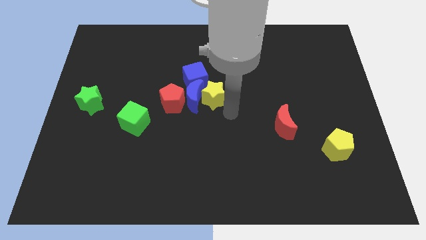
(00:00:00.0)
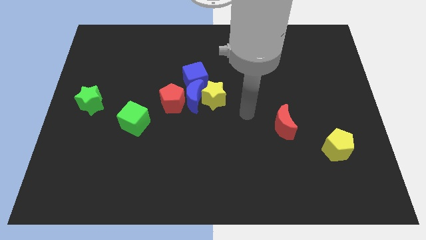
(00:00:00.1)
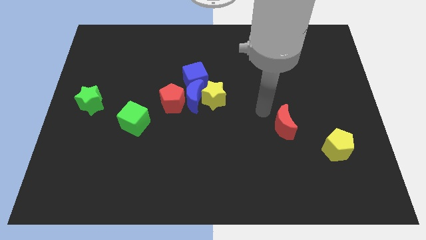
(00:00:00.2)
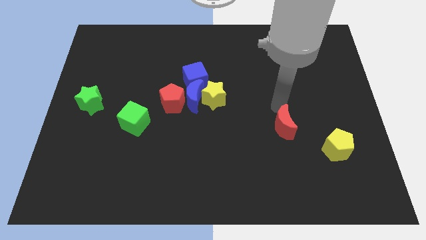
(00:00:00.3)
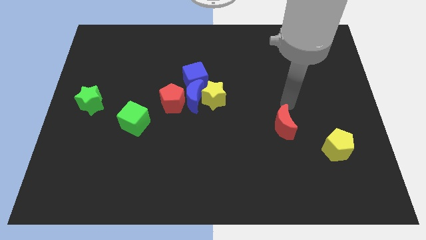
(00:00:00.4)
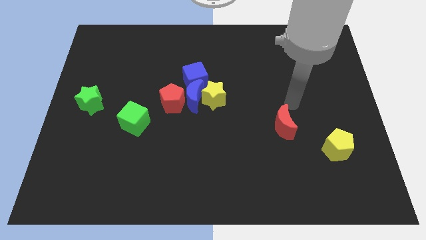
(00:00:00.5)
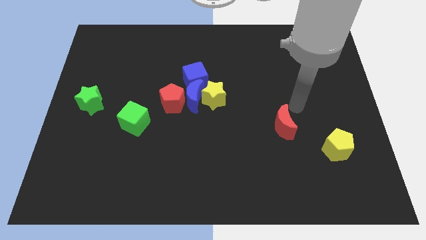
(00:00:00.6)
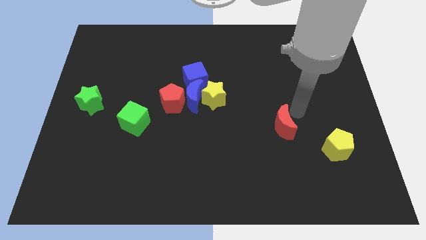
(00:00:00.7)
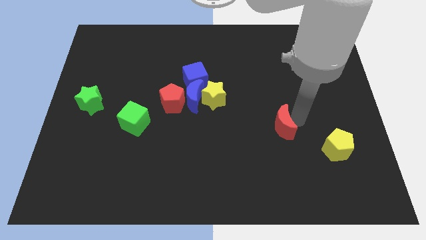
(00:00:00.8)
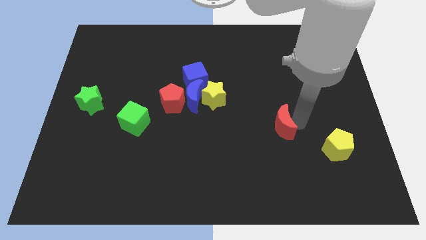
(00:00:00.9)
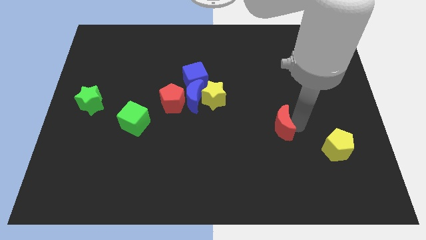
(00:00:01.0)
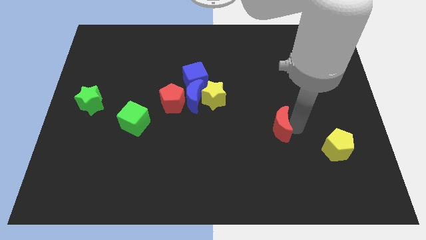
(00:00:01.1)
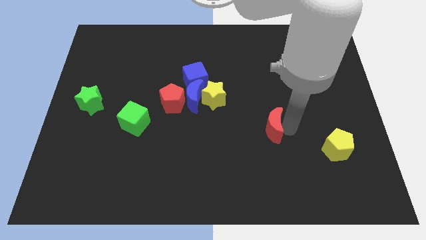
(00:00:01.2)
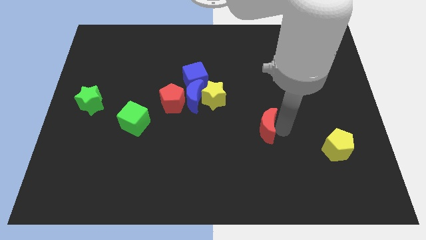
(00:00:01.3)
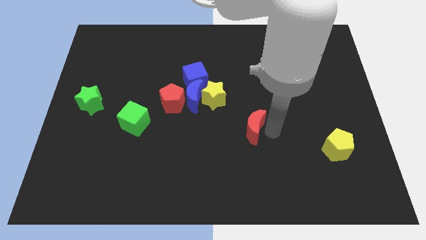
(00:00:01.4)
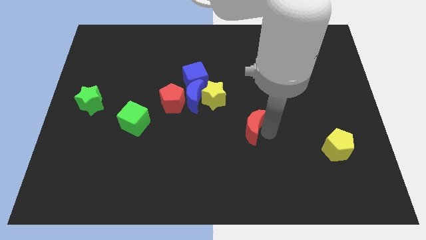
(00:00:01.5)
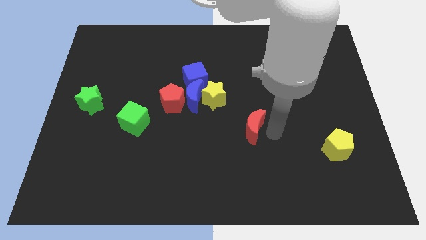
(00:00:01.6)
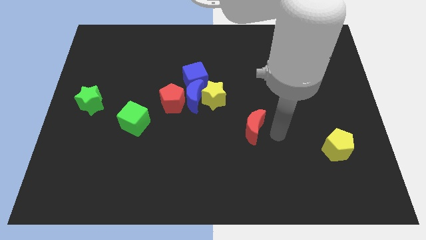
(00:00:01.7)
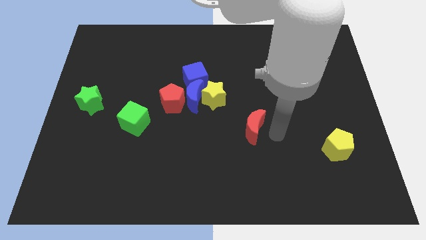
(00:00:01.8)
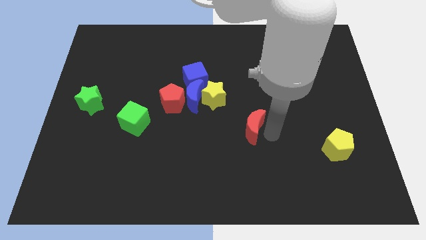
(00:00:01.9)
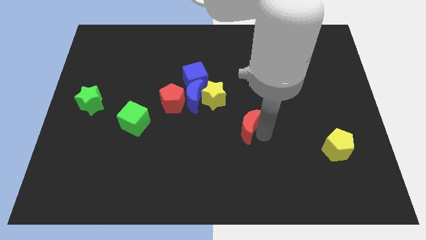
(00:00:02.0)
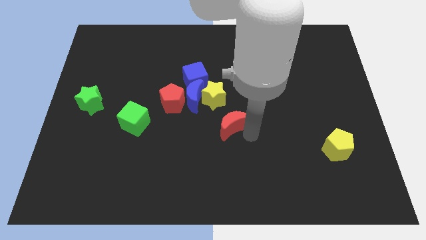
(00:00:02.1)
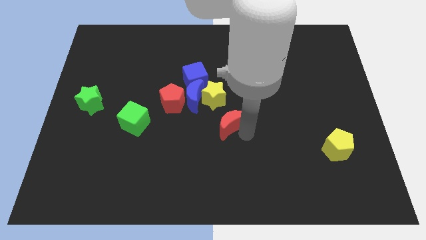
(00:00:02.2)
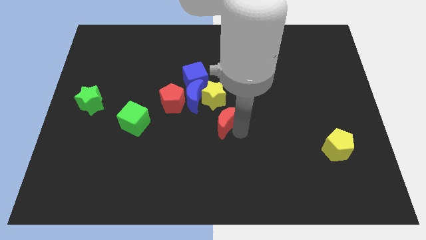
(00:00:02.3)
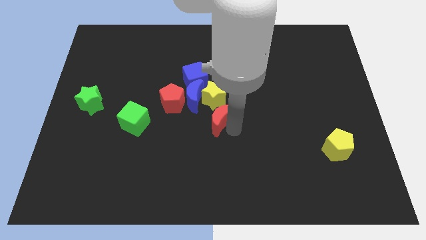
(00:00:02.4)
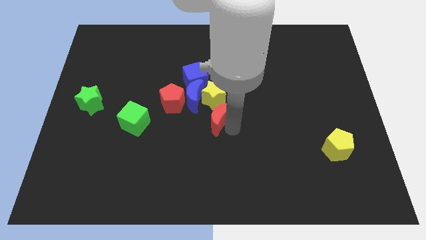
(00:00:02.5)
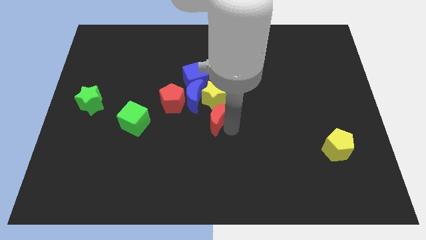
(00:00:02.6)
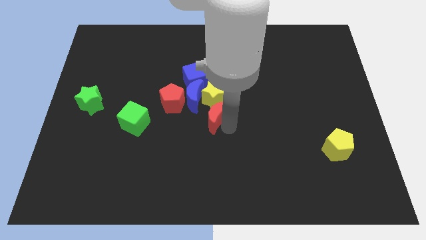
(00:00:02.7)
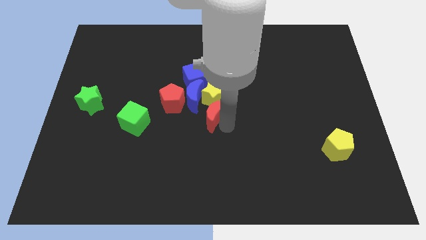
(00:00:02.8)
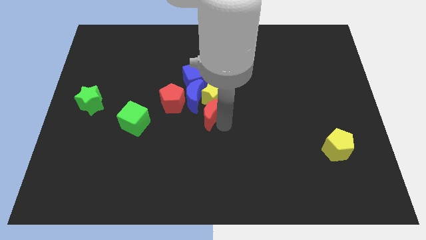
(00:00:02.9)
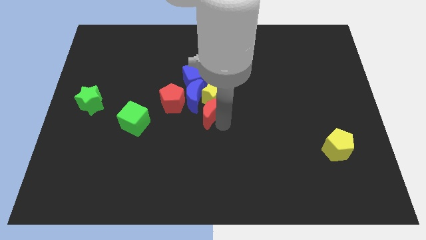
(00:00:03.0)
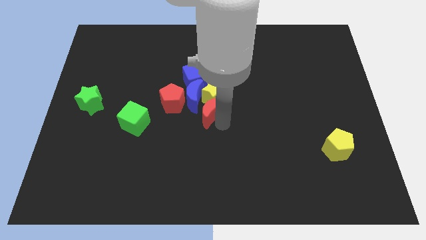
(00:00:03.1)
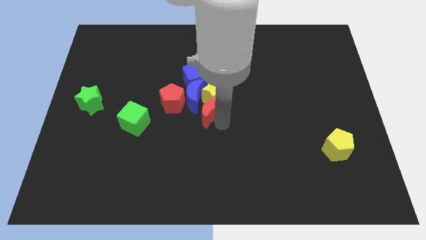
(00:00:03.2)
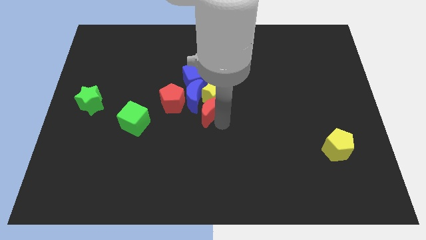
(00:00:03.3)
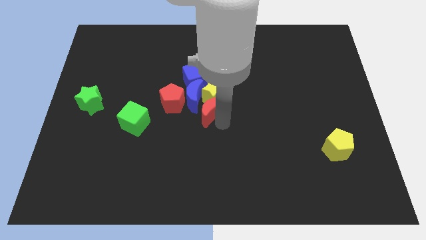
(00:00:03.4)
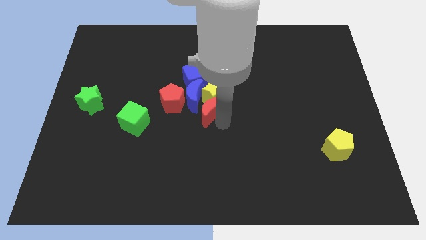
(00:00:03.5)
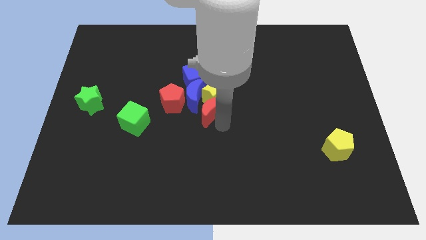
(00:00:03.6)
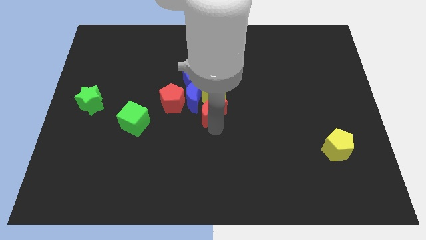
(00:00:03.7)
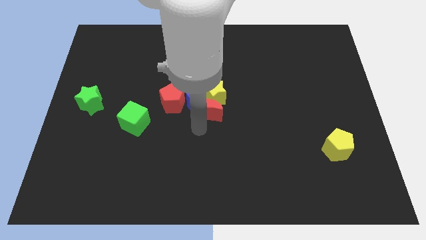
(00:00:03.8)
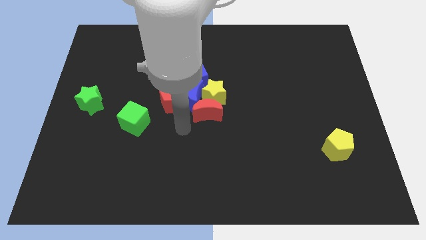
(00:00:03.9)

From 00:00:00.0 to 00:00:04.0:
move the red crescent below the yellow star

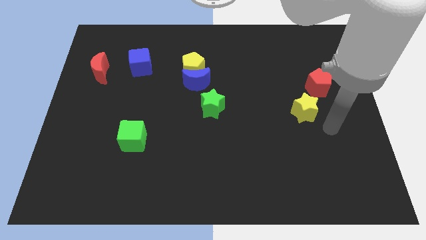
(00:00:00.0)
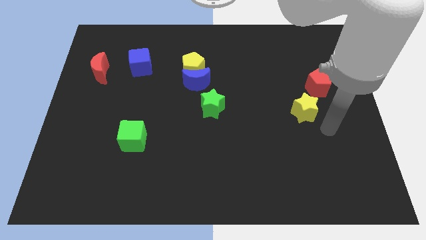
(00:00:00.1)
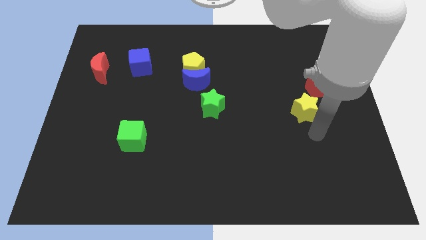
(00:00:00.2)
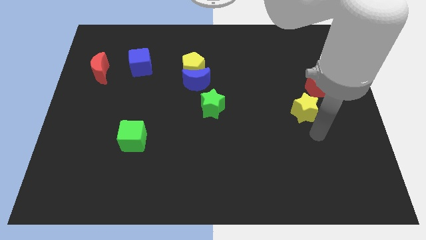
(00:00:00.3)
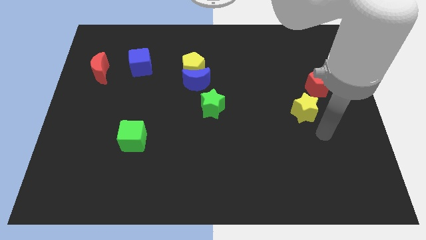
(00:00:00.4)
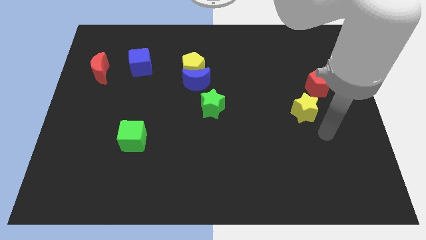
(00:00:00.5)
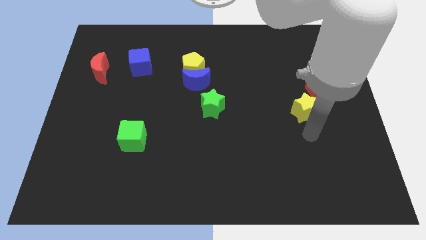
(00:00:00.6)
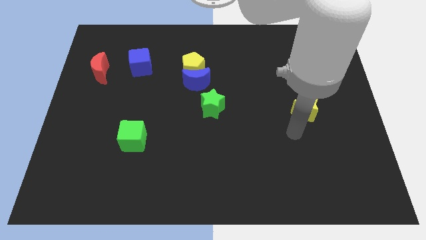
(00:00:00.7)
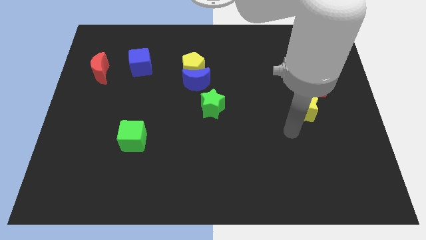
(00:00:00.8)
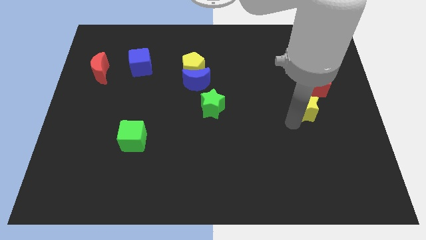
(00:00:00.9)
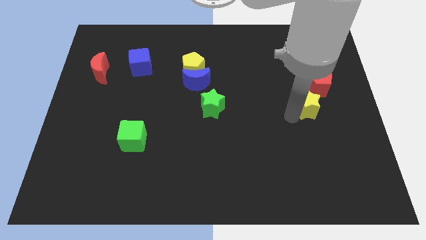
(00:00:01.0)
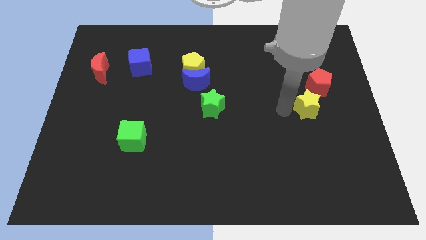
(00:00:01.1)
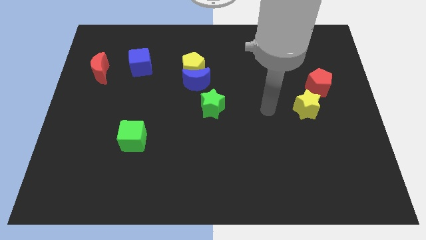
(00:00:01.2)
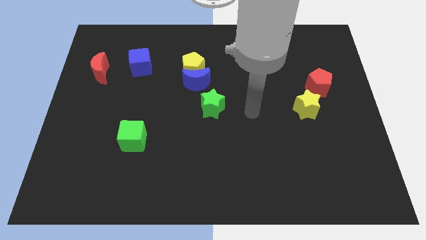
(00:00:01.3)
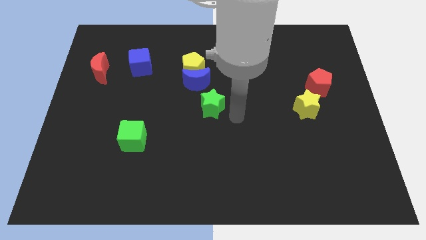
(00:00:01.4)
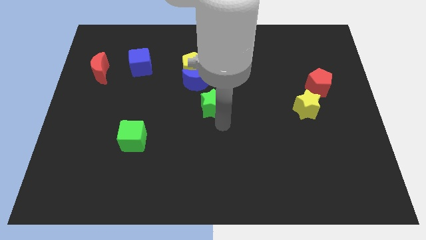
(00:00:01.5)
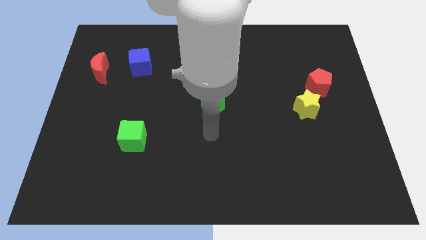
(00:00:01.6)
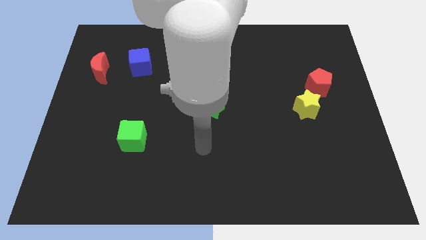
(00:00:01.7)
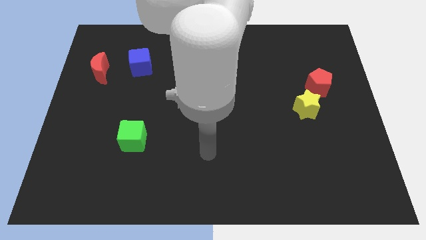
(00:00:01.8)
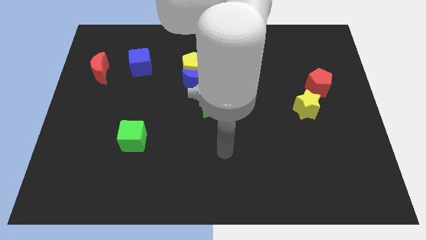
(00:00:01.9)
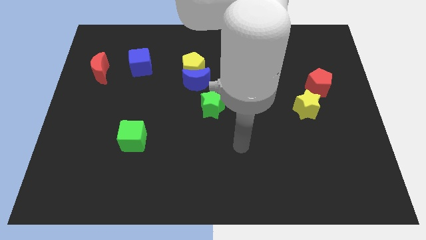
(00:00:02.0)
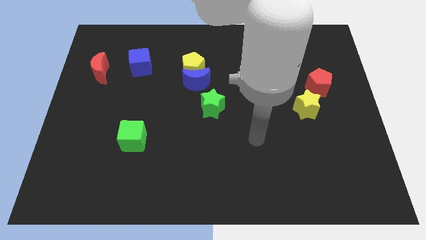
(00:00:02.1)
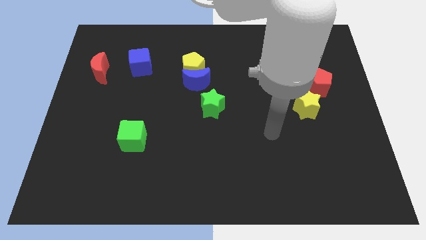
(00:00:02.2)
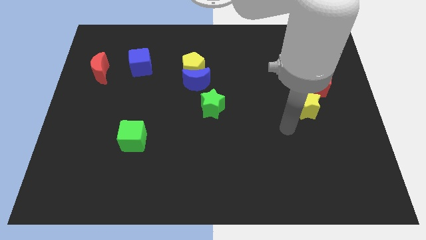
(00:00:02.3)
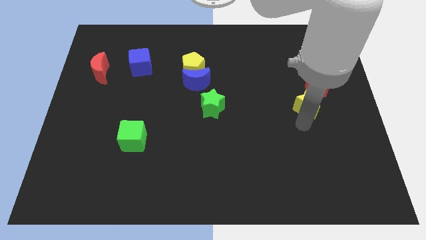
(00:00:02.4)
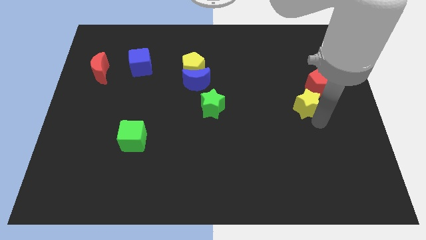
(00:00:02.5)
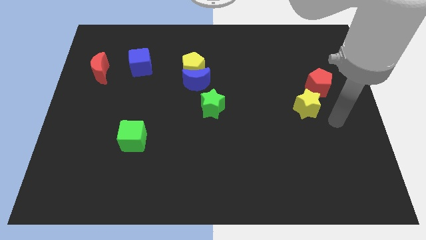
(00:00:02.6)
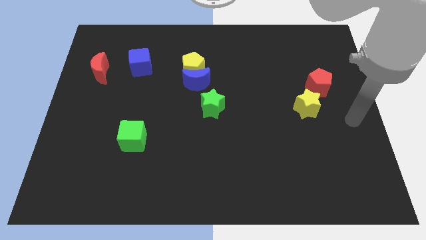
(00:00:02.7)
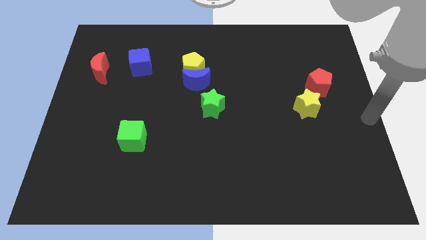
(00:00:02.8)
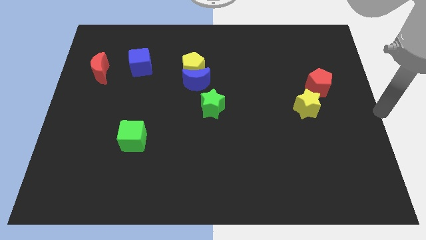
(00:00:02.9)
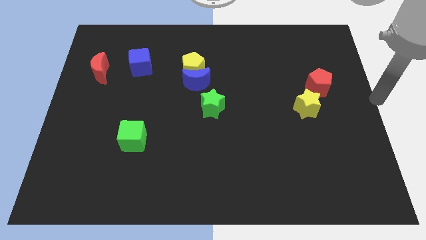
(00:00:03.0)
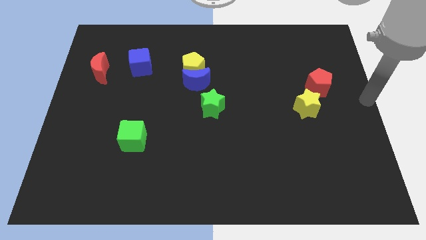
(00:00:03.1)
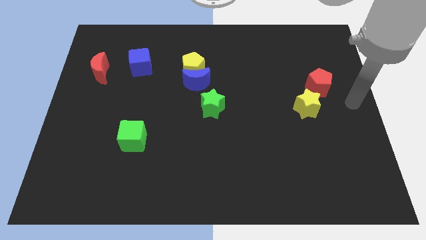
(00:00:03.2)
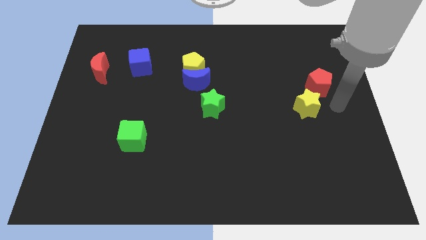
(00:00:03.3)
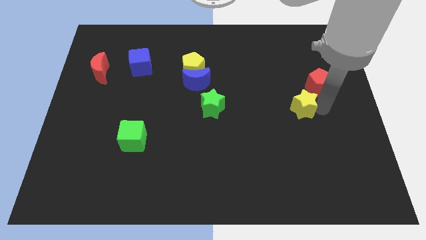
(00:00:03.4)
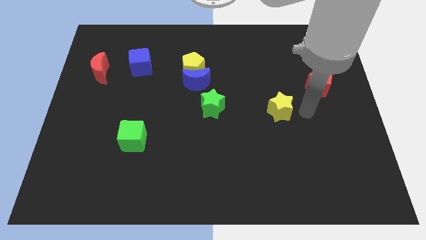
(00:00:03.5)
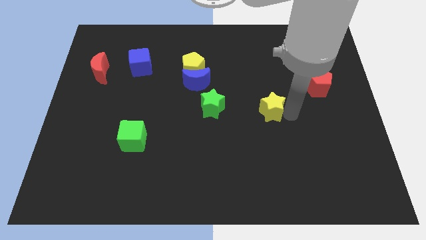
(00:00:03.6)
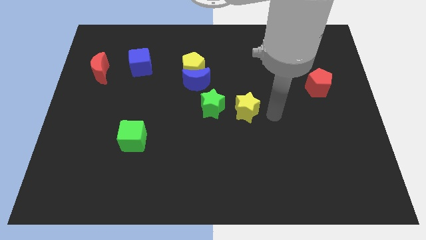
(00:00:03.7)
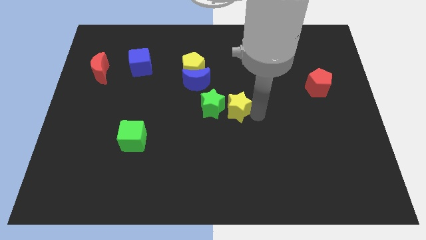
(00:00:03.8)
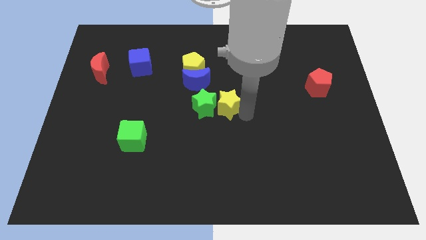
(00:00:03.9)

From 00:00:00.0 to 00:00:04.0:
place the yellow star close to green star

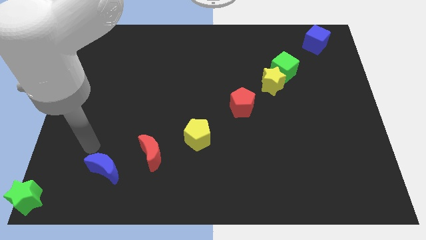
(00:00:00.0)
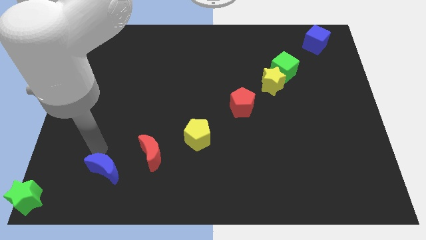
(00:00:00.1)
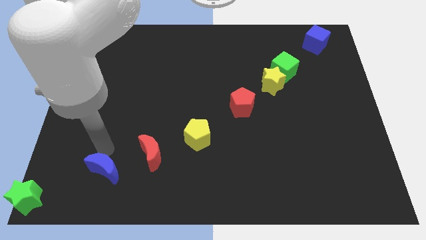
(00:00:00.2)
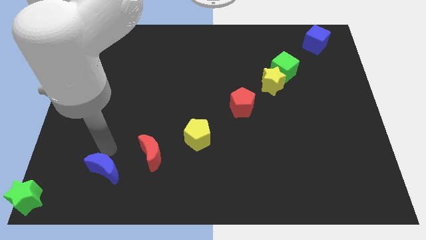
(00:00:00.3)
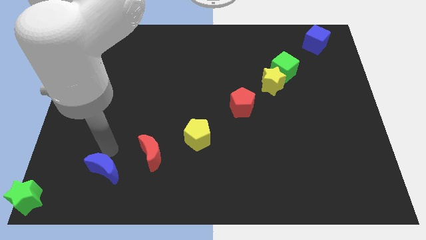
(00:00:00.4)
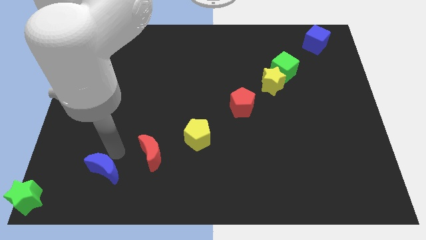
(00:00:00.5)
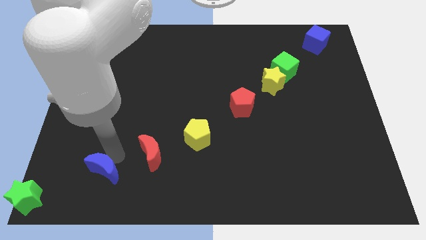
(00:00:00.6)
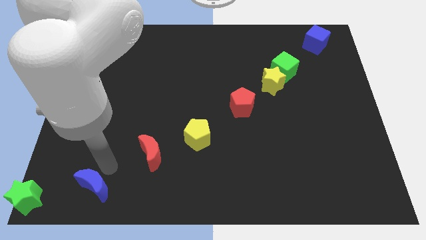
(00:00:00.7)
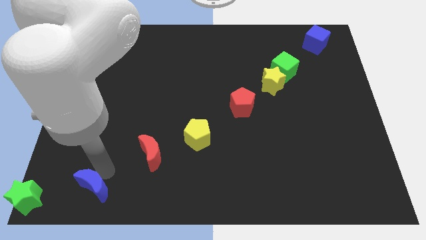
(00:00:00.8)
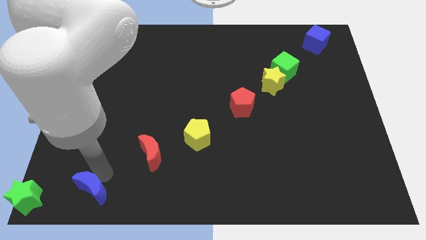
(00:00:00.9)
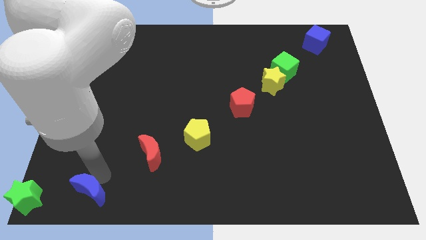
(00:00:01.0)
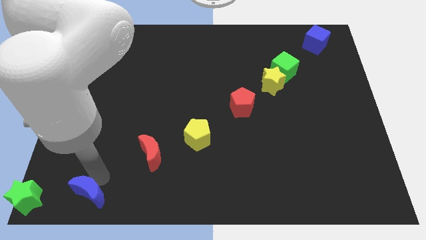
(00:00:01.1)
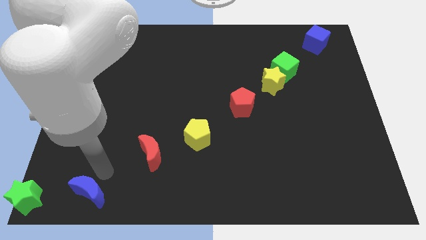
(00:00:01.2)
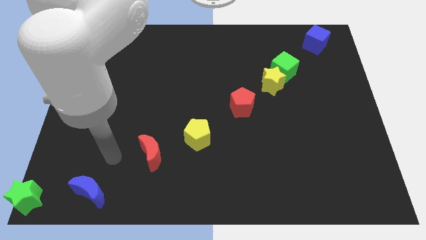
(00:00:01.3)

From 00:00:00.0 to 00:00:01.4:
move the blue moon slightly down
